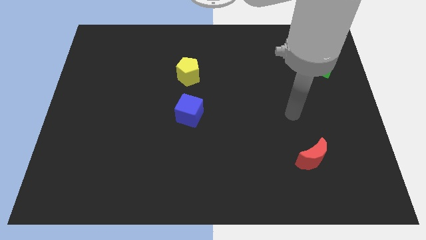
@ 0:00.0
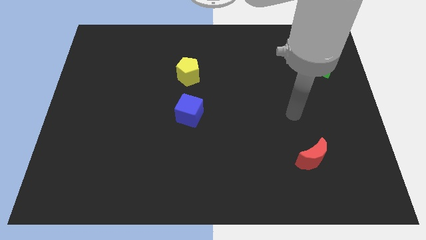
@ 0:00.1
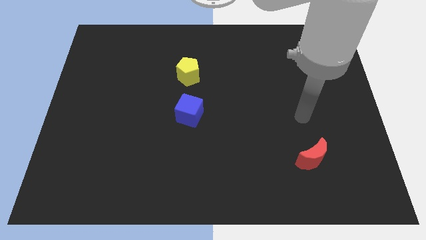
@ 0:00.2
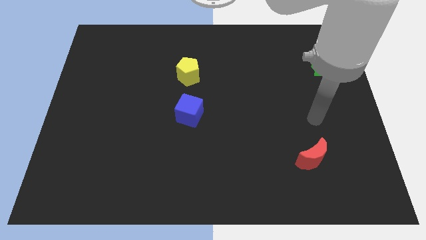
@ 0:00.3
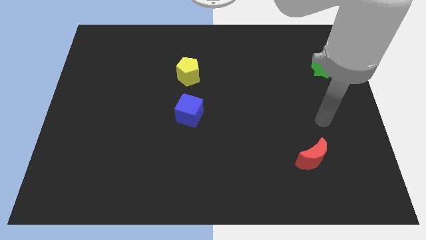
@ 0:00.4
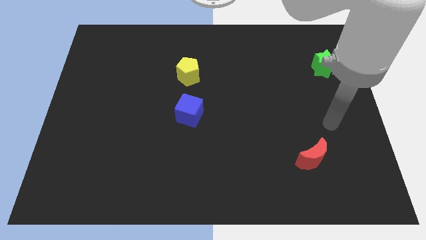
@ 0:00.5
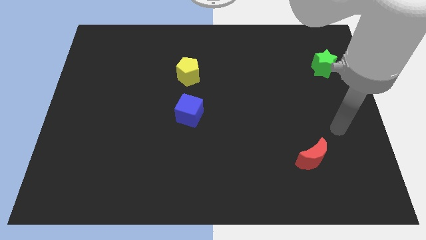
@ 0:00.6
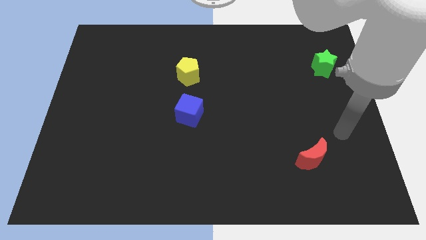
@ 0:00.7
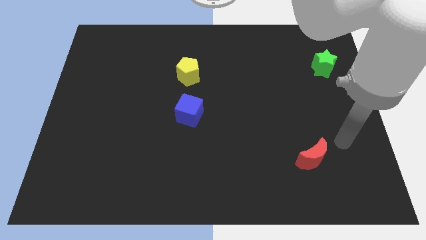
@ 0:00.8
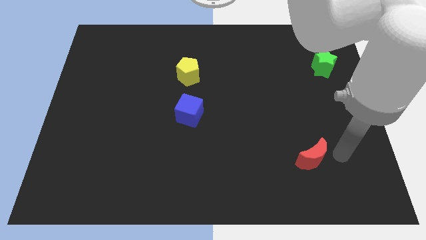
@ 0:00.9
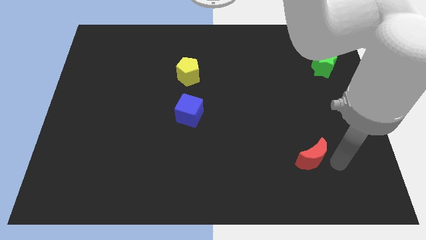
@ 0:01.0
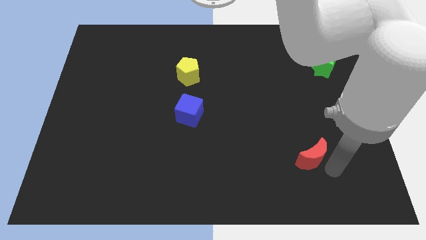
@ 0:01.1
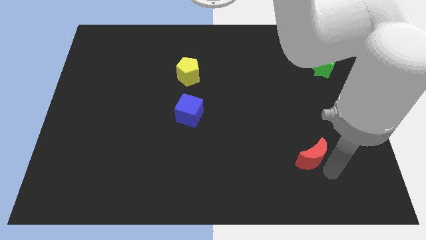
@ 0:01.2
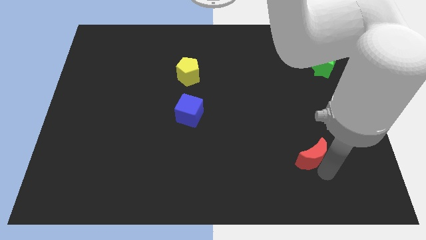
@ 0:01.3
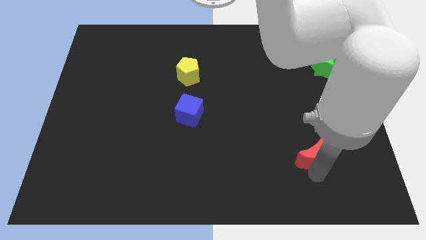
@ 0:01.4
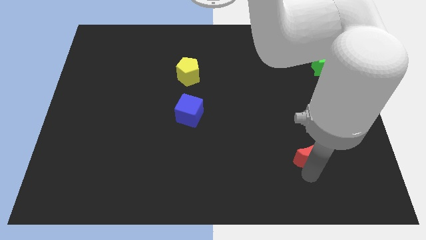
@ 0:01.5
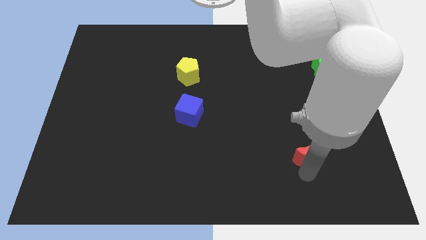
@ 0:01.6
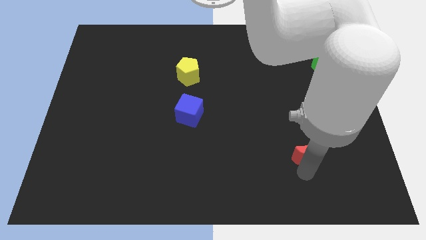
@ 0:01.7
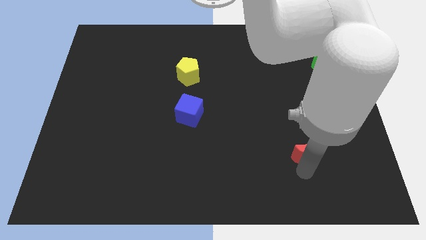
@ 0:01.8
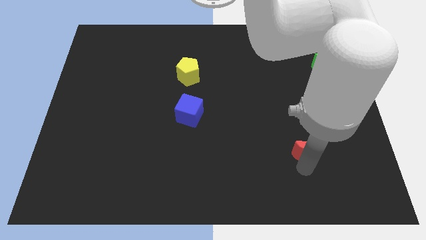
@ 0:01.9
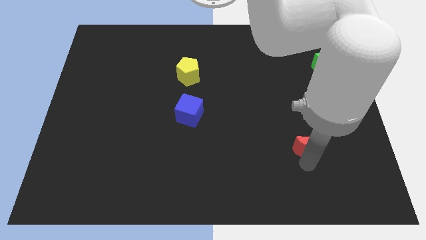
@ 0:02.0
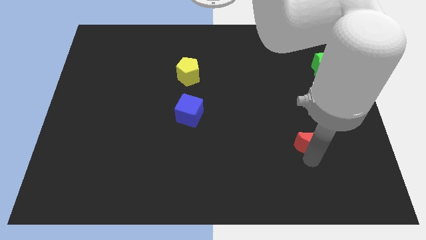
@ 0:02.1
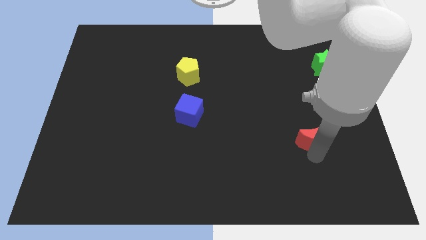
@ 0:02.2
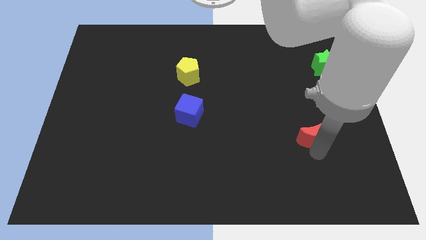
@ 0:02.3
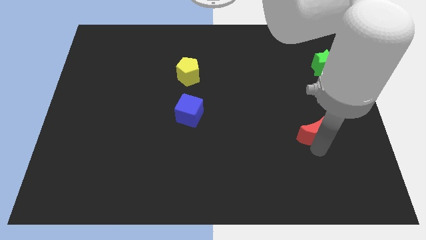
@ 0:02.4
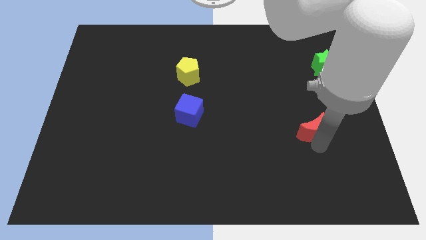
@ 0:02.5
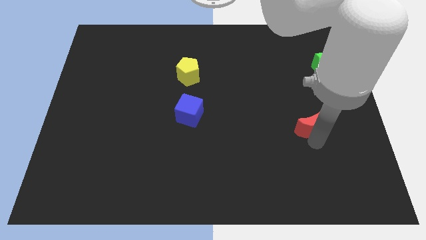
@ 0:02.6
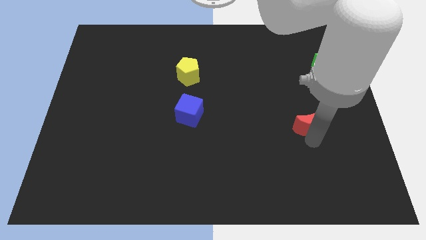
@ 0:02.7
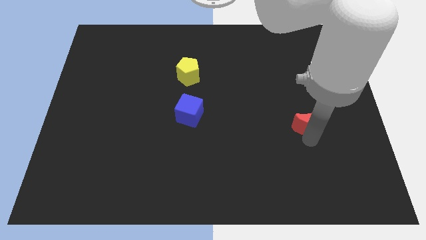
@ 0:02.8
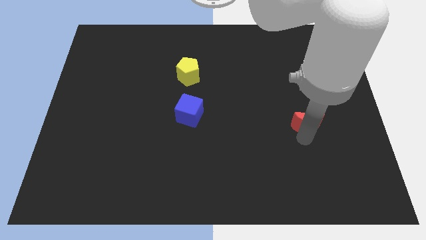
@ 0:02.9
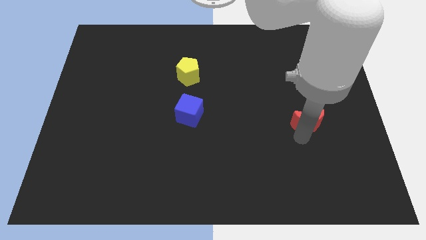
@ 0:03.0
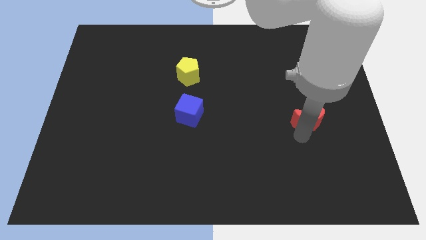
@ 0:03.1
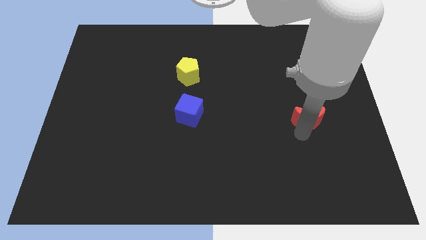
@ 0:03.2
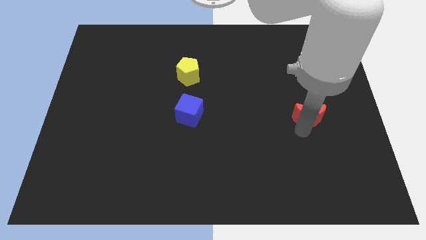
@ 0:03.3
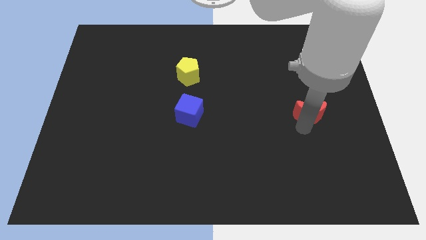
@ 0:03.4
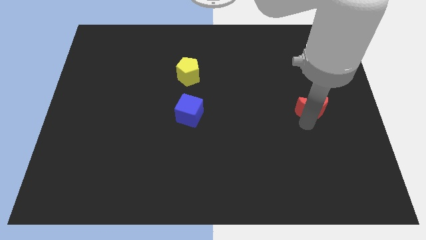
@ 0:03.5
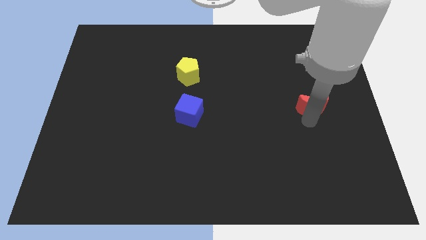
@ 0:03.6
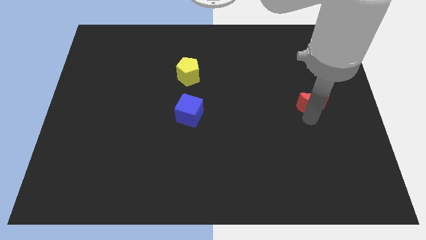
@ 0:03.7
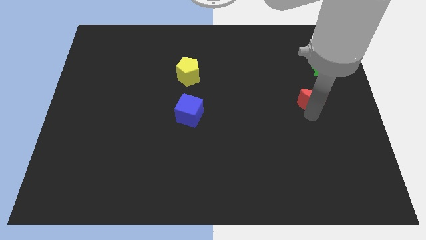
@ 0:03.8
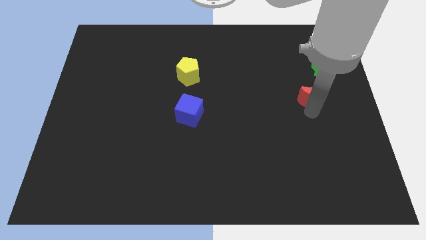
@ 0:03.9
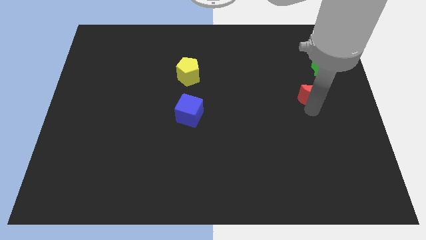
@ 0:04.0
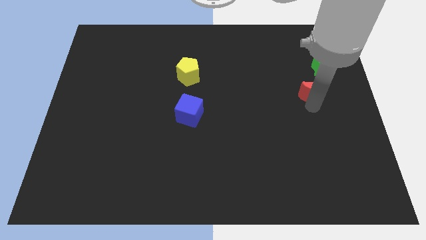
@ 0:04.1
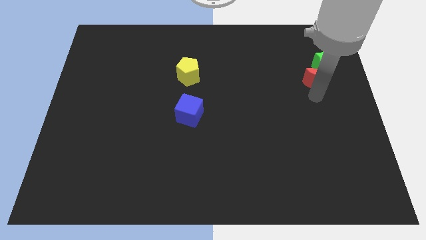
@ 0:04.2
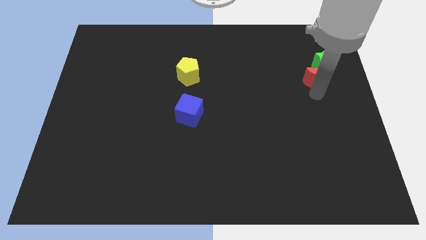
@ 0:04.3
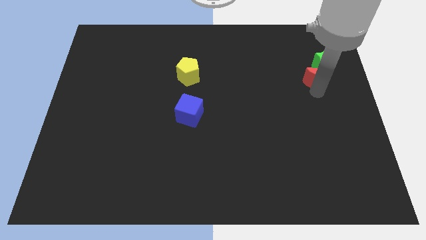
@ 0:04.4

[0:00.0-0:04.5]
put the red block to the green star

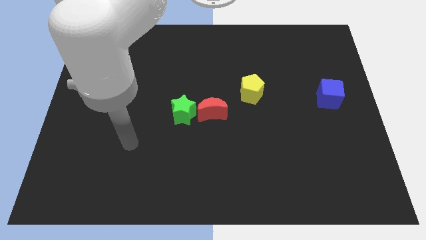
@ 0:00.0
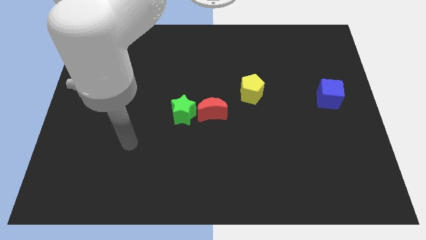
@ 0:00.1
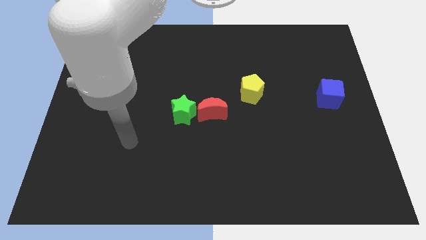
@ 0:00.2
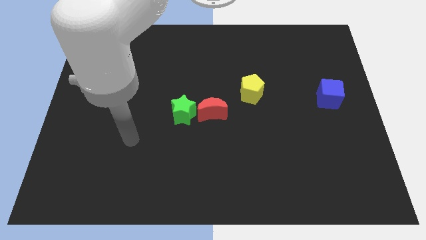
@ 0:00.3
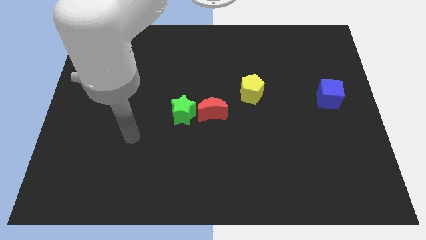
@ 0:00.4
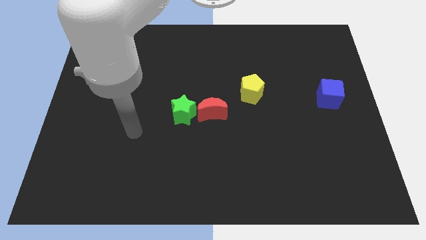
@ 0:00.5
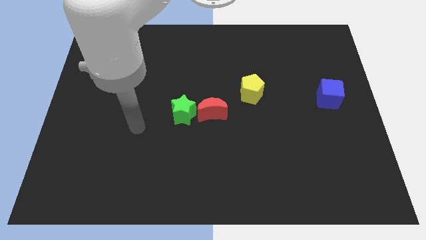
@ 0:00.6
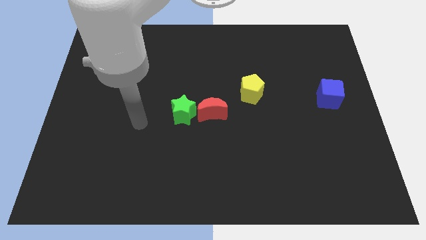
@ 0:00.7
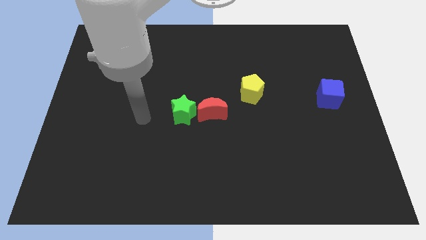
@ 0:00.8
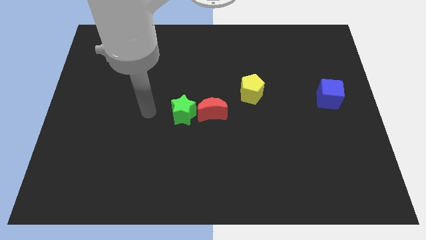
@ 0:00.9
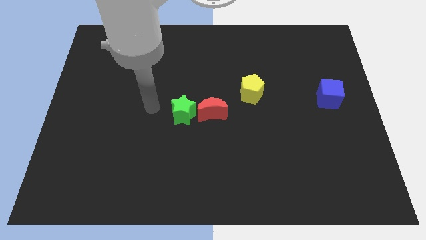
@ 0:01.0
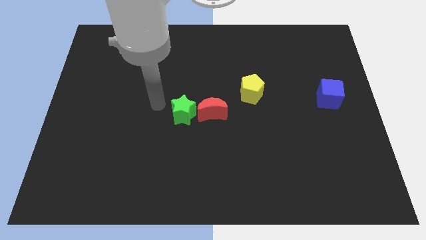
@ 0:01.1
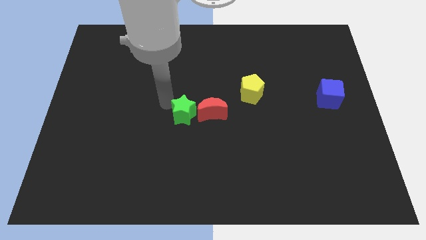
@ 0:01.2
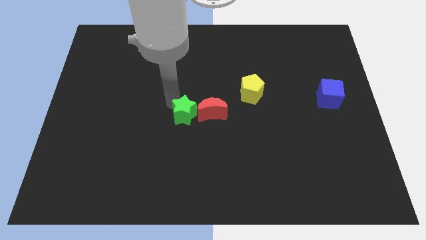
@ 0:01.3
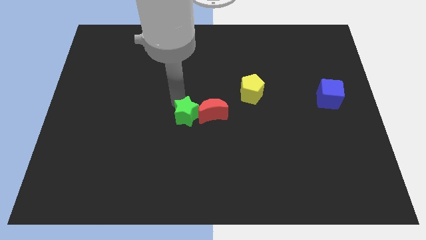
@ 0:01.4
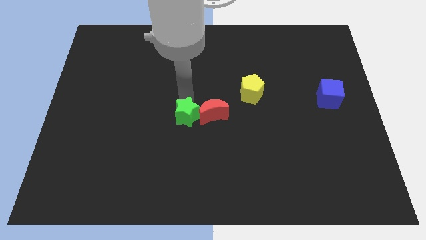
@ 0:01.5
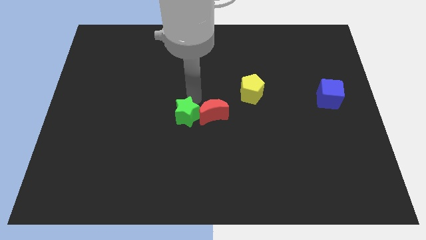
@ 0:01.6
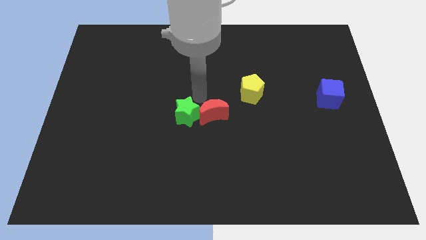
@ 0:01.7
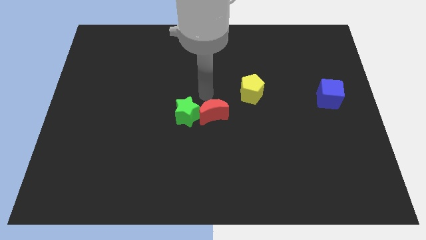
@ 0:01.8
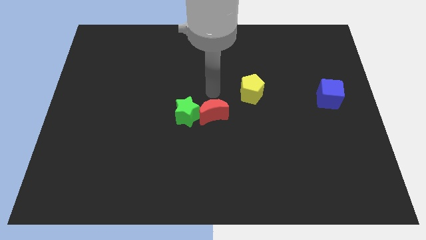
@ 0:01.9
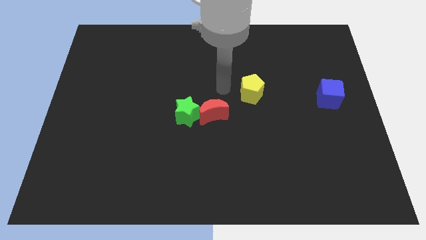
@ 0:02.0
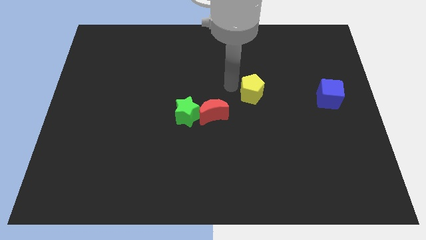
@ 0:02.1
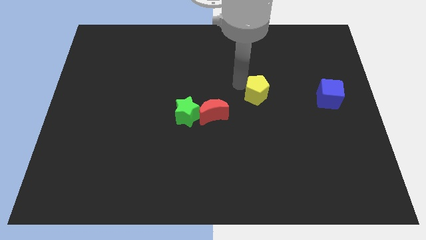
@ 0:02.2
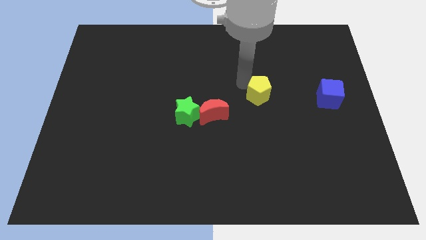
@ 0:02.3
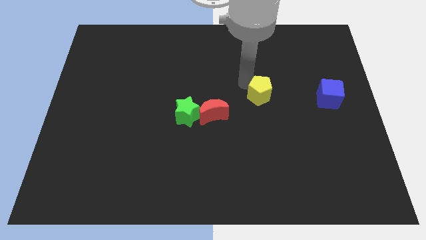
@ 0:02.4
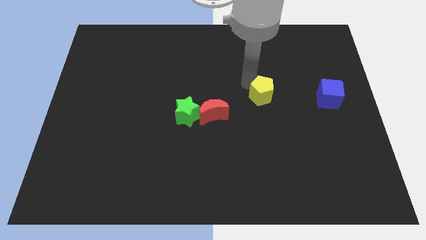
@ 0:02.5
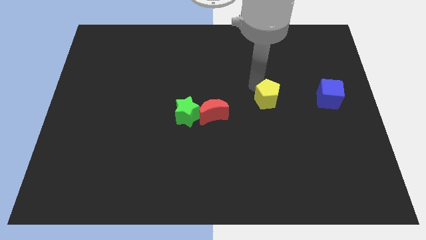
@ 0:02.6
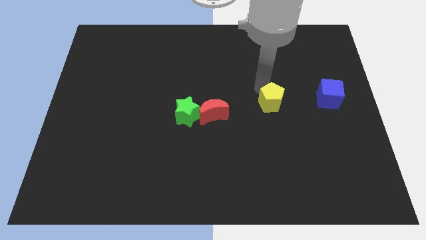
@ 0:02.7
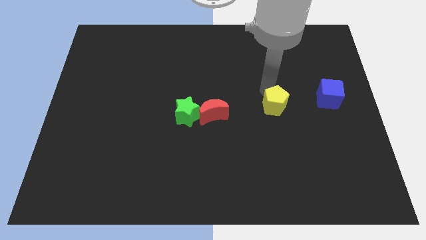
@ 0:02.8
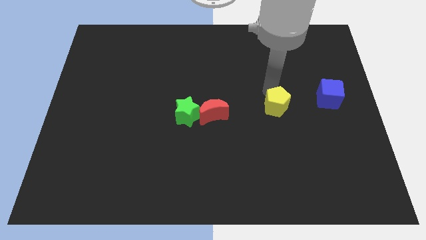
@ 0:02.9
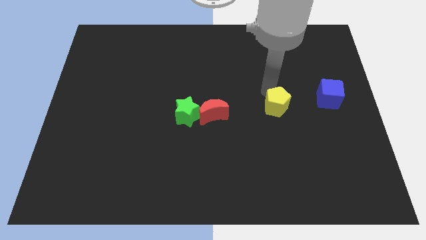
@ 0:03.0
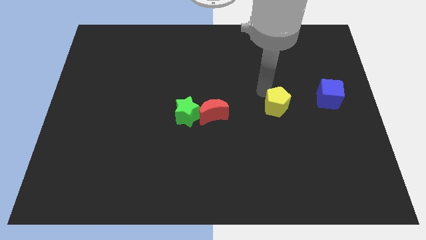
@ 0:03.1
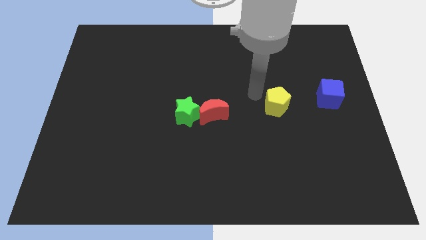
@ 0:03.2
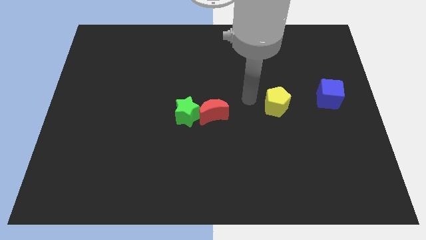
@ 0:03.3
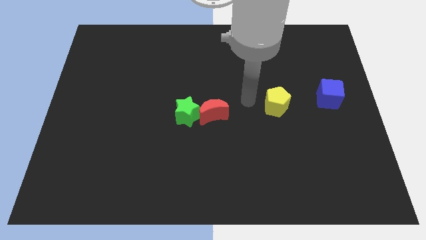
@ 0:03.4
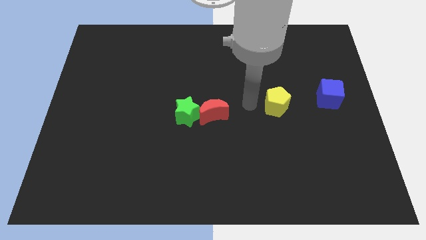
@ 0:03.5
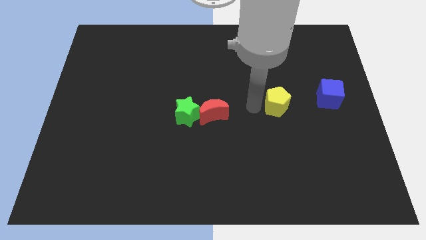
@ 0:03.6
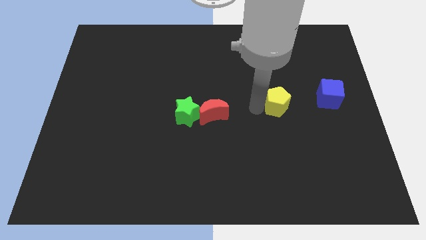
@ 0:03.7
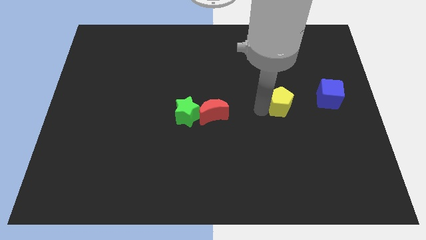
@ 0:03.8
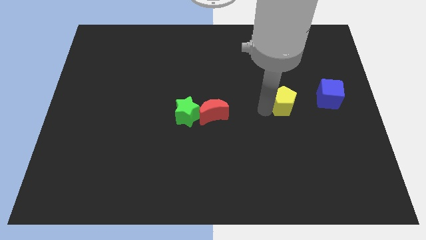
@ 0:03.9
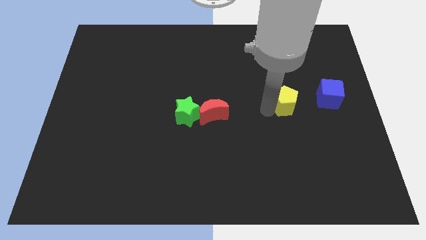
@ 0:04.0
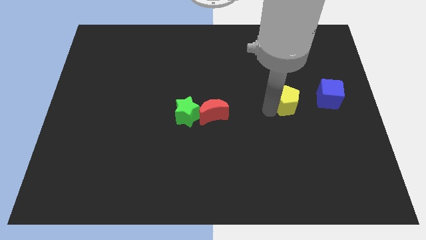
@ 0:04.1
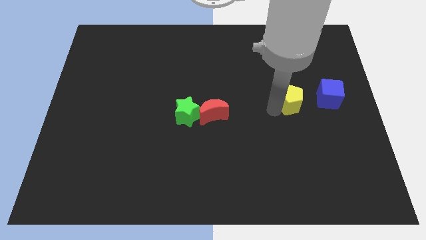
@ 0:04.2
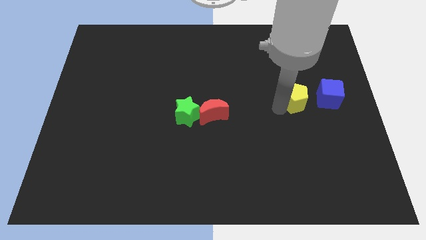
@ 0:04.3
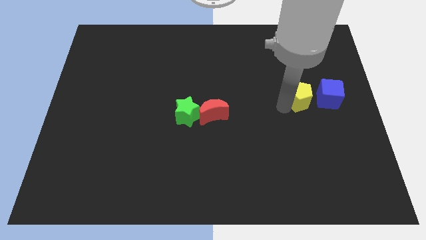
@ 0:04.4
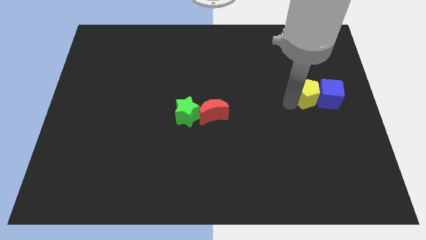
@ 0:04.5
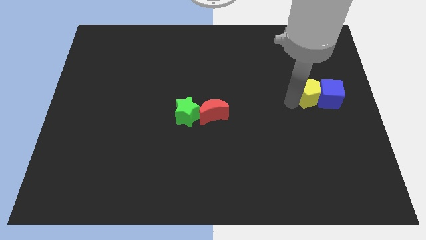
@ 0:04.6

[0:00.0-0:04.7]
put the pentagon close to the cube
